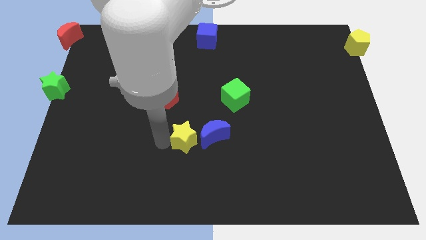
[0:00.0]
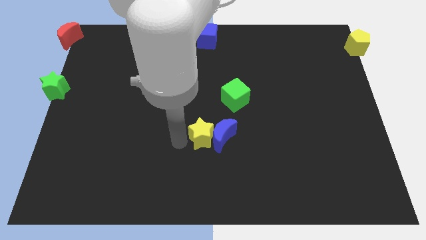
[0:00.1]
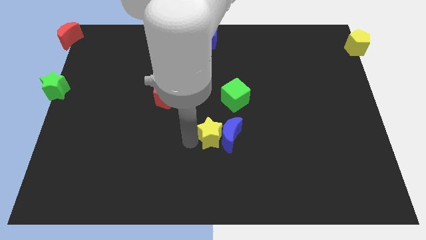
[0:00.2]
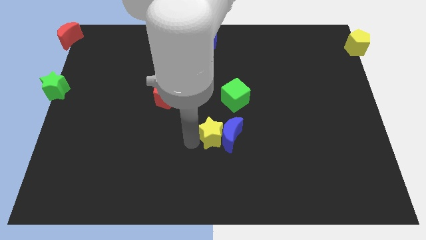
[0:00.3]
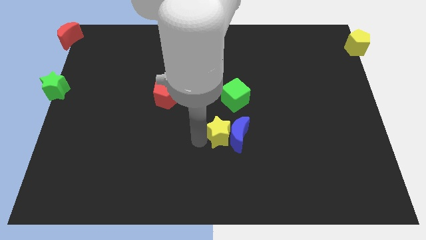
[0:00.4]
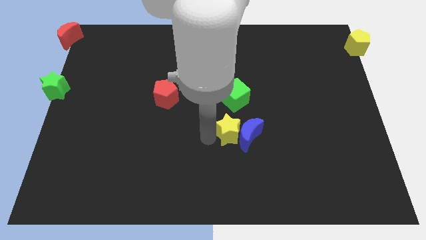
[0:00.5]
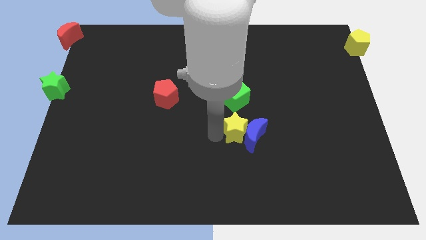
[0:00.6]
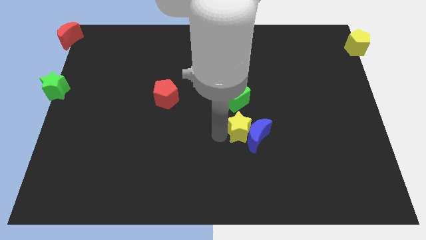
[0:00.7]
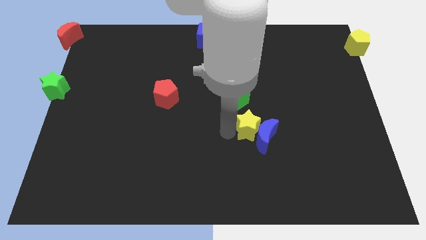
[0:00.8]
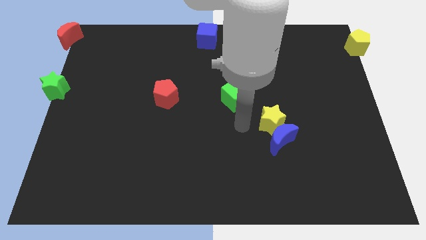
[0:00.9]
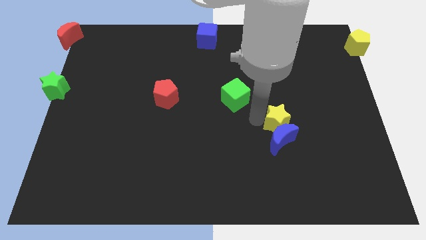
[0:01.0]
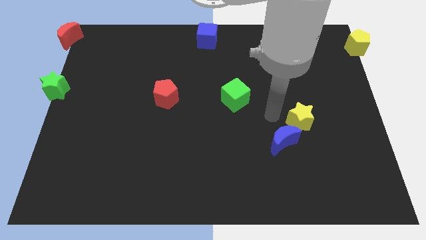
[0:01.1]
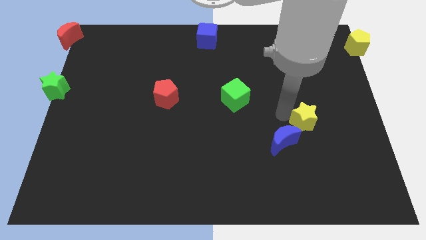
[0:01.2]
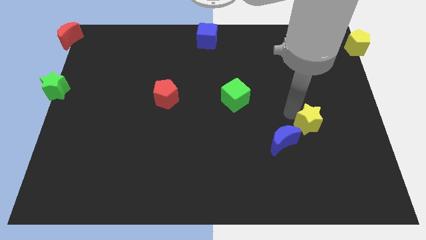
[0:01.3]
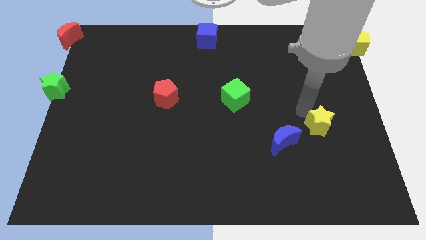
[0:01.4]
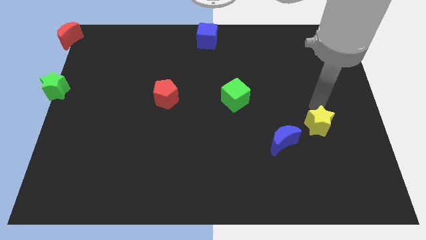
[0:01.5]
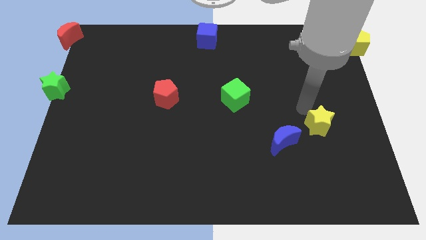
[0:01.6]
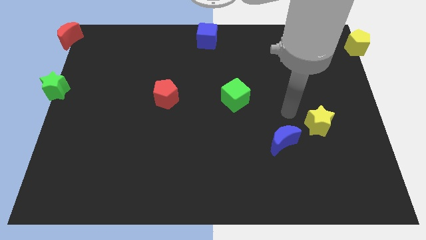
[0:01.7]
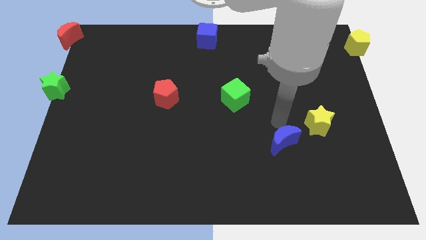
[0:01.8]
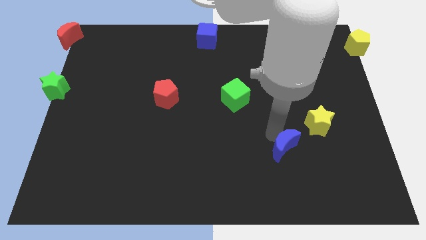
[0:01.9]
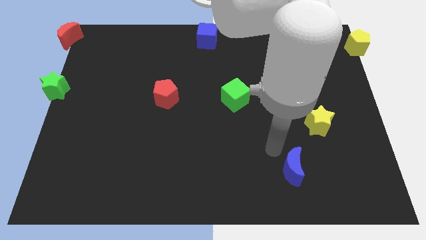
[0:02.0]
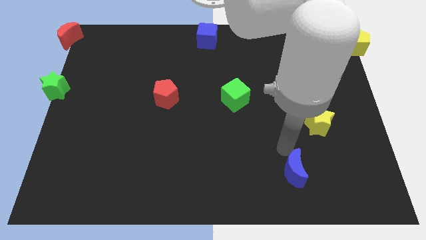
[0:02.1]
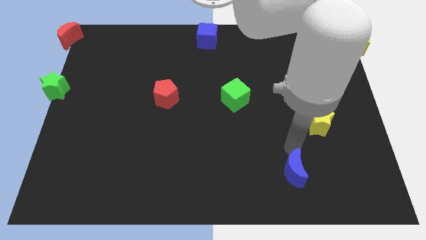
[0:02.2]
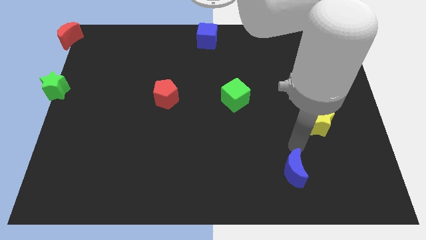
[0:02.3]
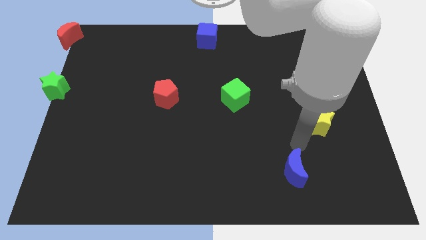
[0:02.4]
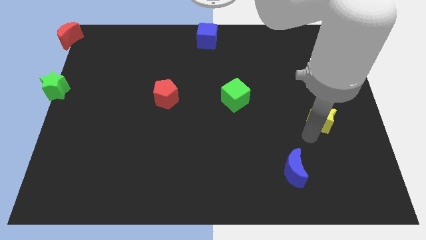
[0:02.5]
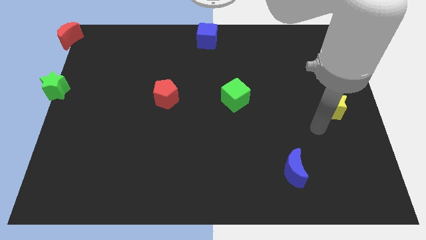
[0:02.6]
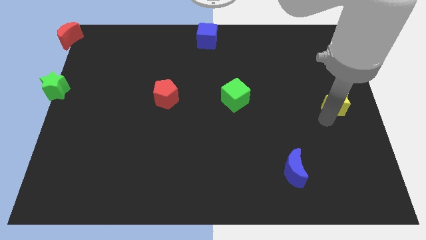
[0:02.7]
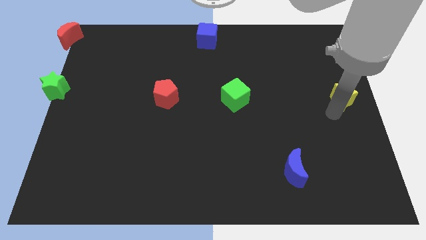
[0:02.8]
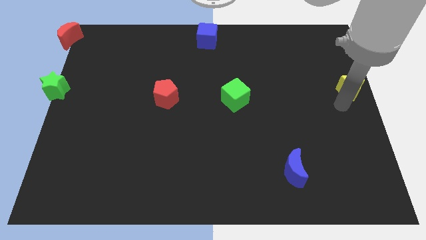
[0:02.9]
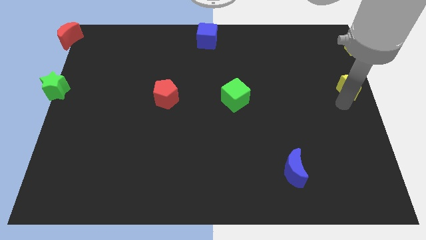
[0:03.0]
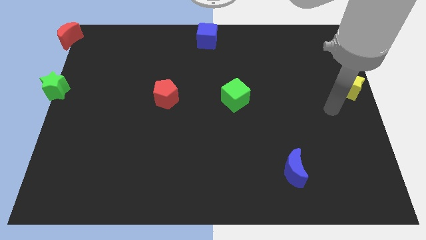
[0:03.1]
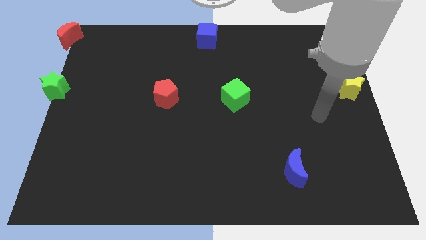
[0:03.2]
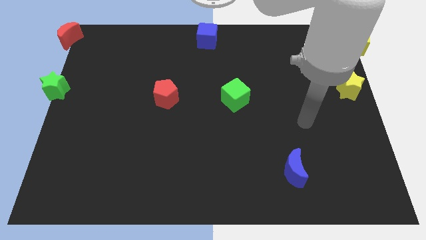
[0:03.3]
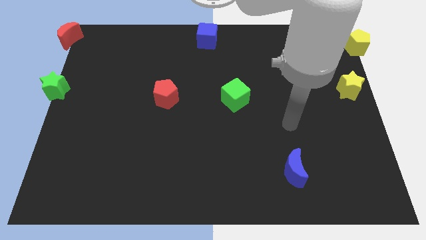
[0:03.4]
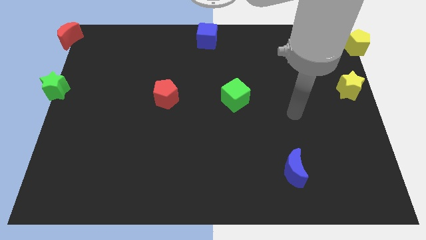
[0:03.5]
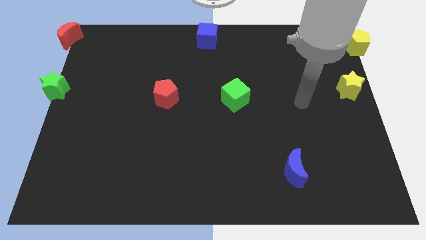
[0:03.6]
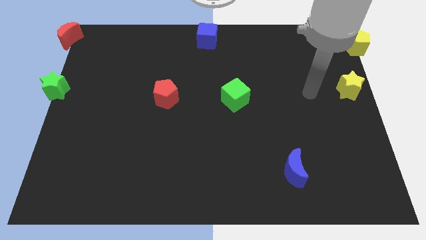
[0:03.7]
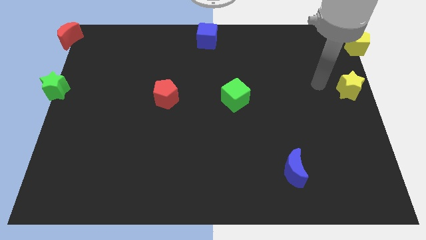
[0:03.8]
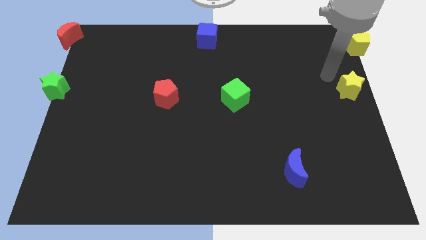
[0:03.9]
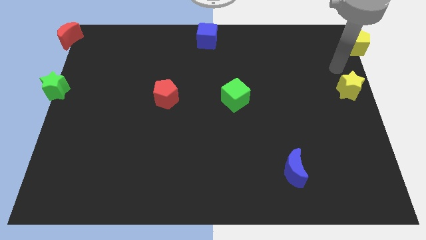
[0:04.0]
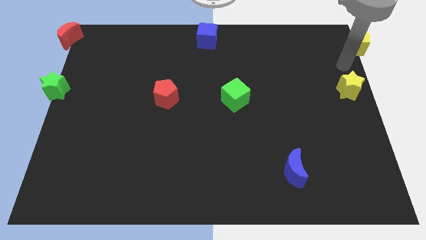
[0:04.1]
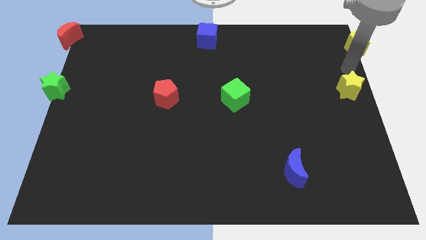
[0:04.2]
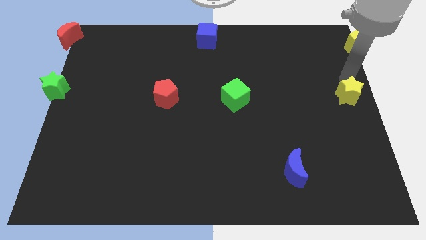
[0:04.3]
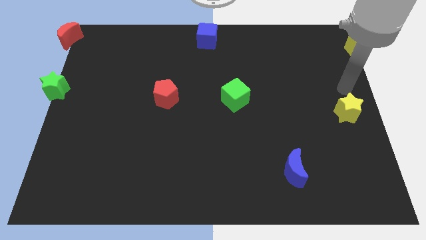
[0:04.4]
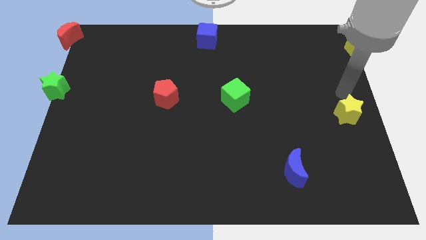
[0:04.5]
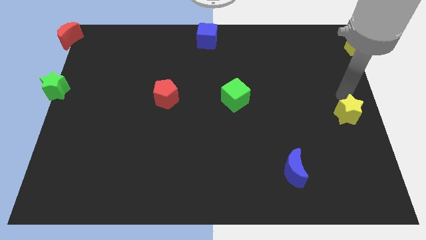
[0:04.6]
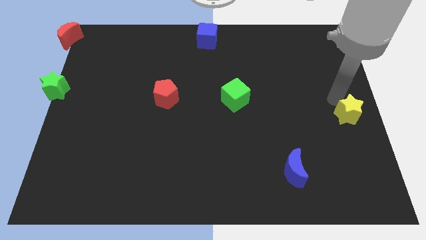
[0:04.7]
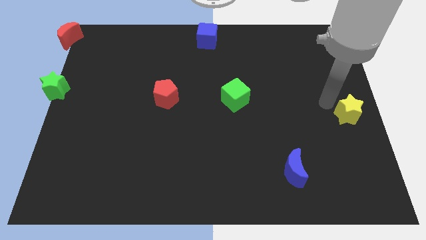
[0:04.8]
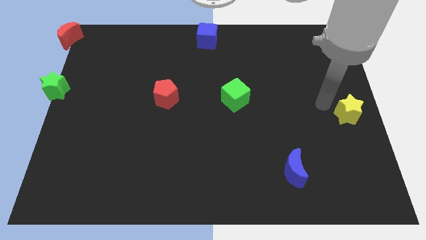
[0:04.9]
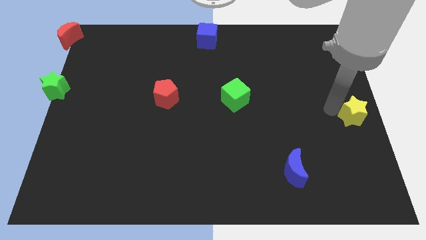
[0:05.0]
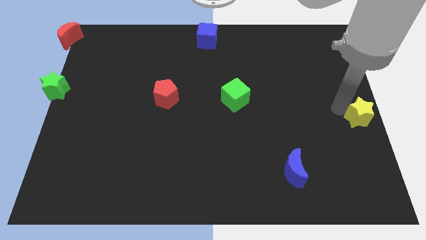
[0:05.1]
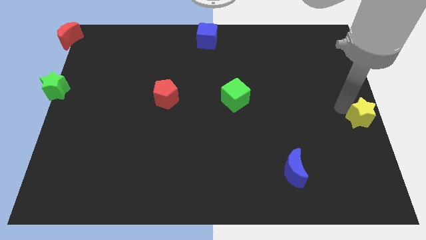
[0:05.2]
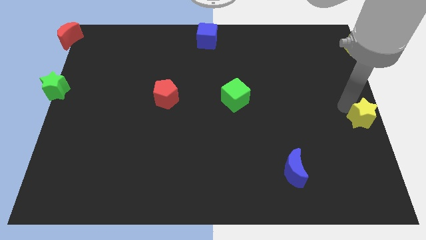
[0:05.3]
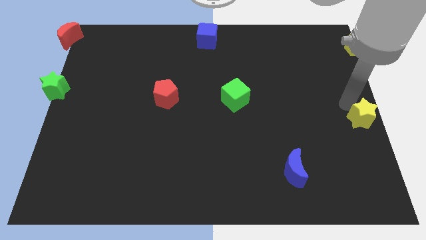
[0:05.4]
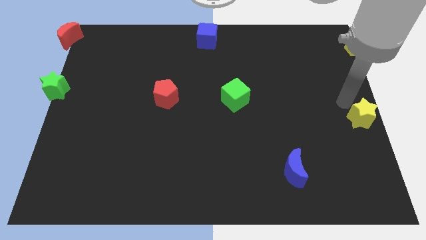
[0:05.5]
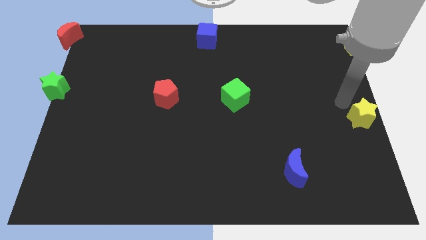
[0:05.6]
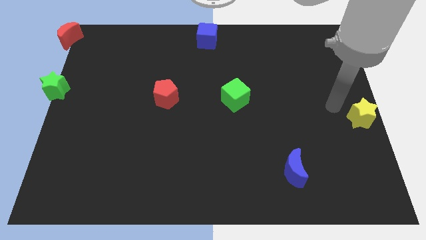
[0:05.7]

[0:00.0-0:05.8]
separate the yellow star from the blue moon

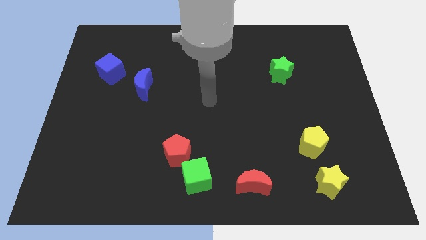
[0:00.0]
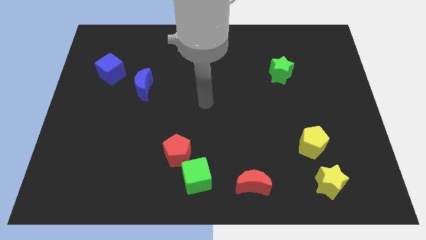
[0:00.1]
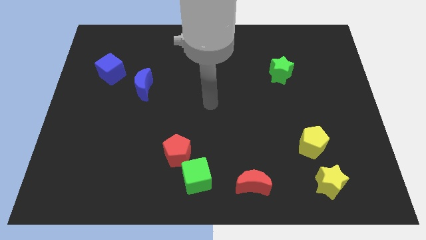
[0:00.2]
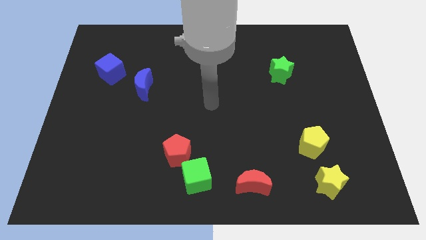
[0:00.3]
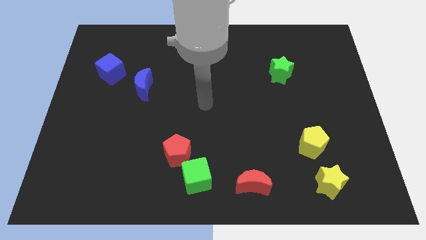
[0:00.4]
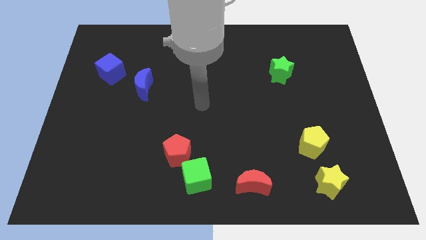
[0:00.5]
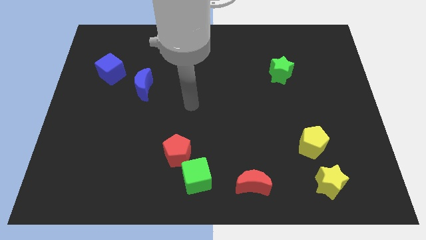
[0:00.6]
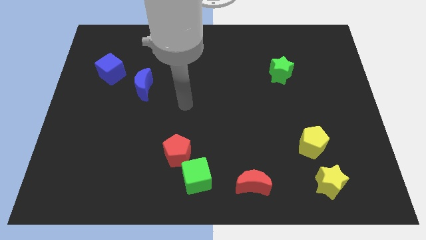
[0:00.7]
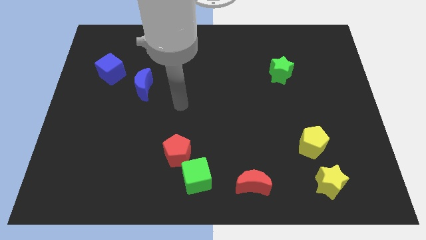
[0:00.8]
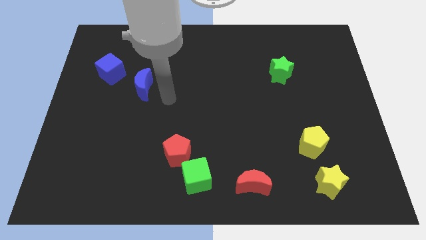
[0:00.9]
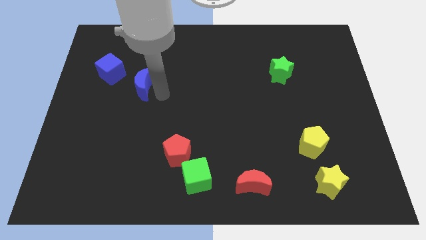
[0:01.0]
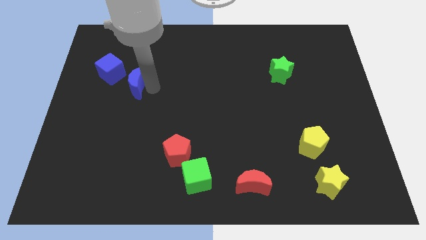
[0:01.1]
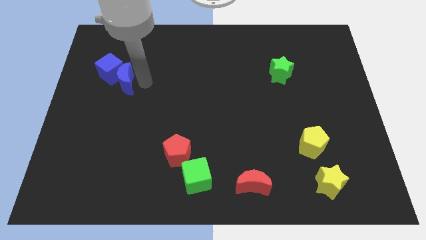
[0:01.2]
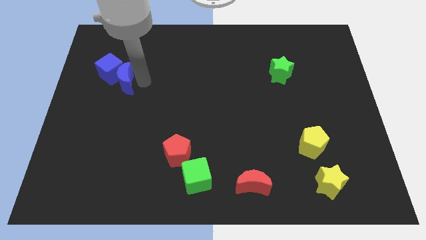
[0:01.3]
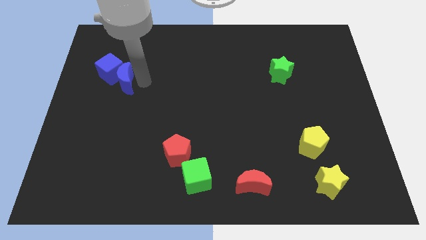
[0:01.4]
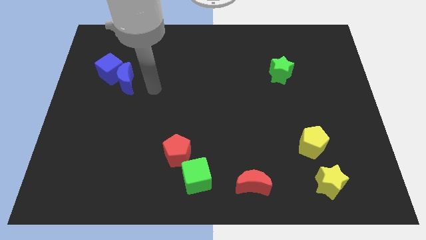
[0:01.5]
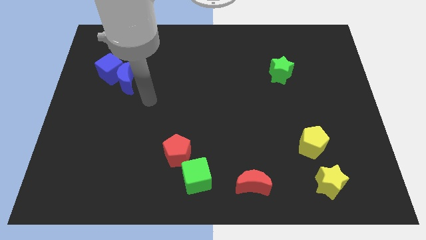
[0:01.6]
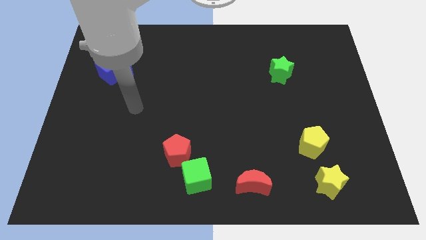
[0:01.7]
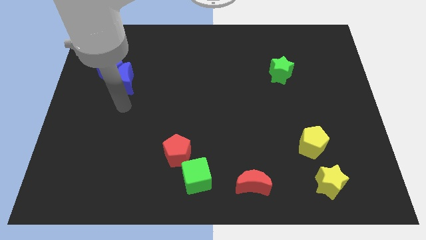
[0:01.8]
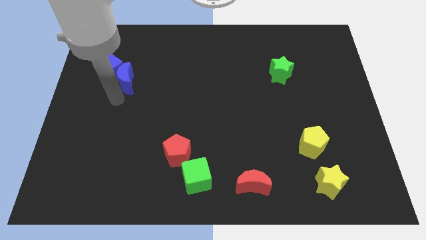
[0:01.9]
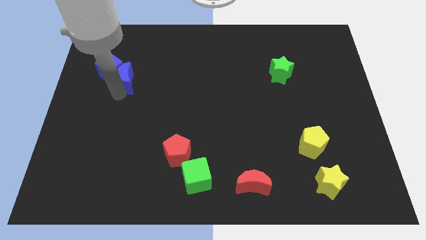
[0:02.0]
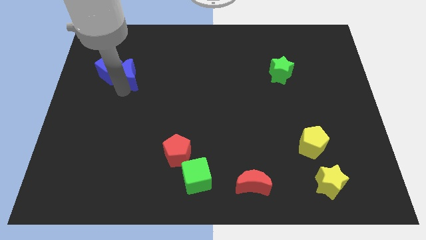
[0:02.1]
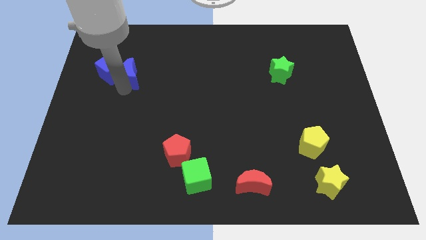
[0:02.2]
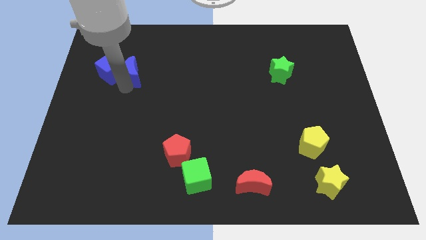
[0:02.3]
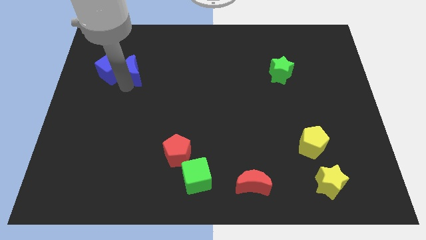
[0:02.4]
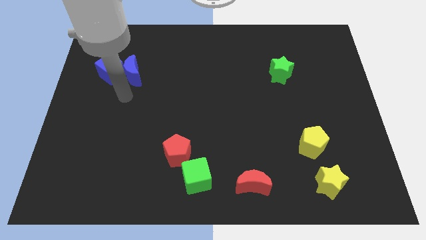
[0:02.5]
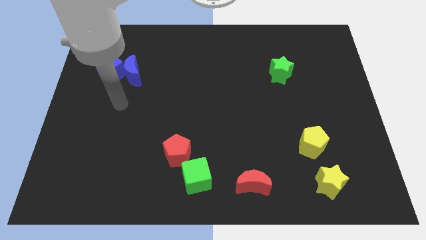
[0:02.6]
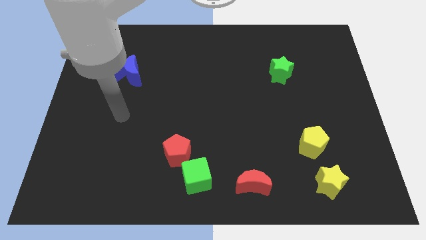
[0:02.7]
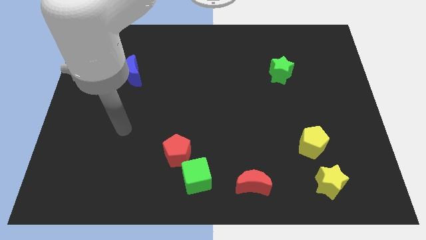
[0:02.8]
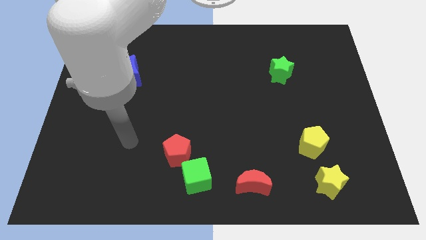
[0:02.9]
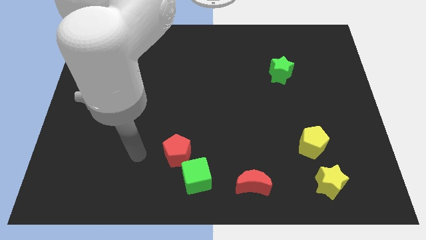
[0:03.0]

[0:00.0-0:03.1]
push the blue crescent into the blue cube
